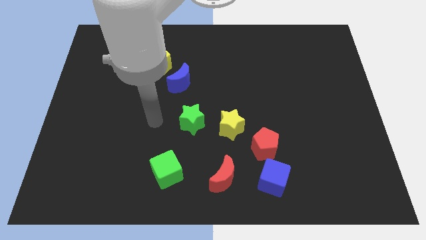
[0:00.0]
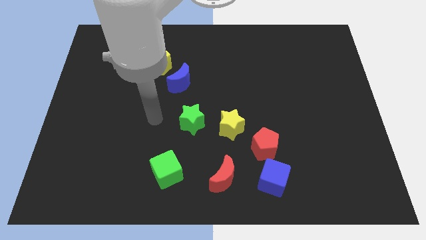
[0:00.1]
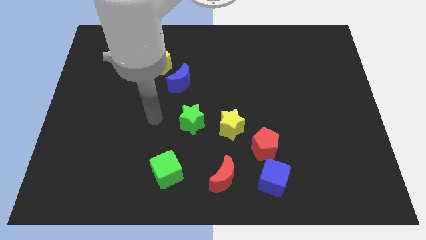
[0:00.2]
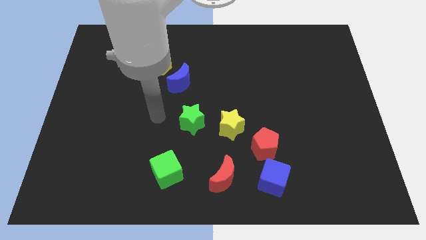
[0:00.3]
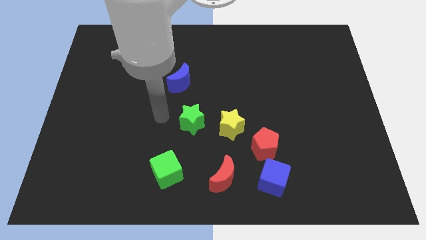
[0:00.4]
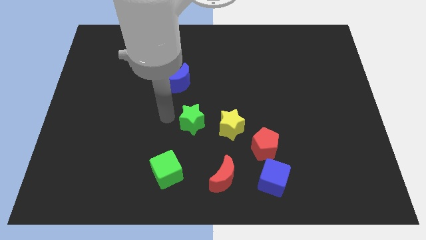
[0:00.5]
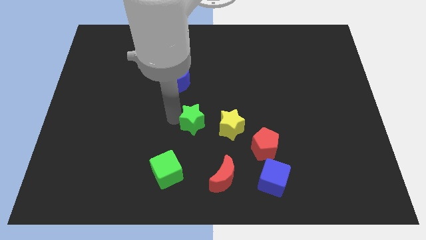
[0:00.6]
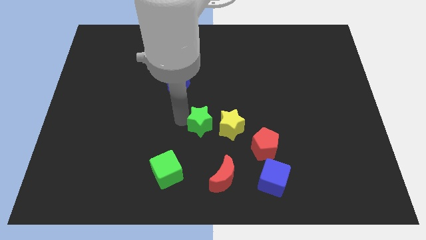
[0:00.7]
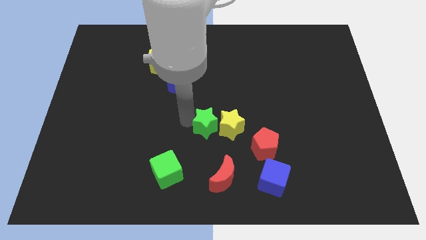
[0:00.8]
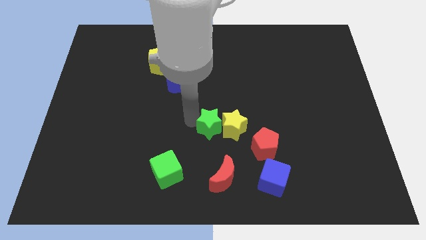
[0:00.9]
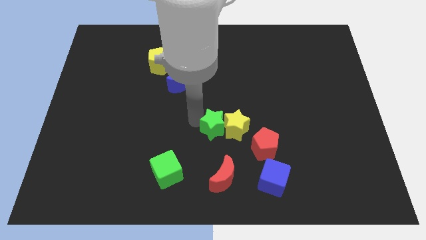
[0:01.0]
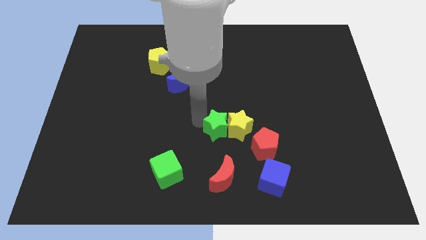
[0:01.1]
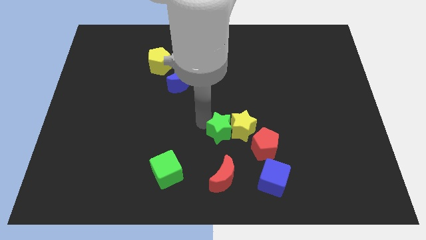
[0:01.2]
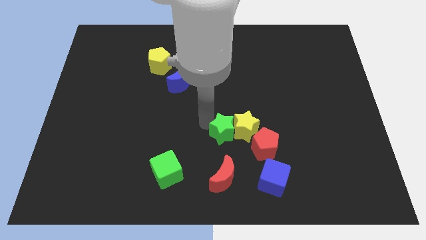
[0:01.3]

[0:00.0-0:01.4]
push the green star into the yellow star

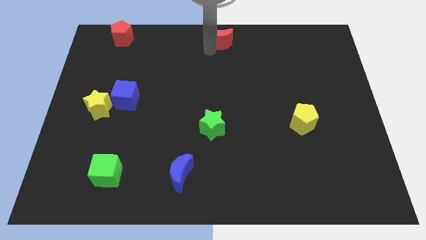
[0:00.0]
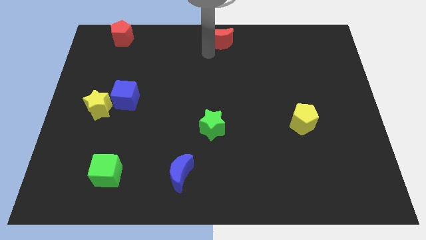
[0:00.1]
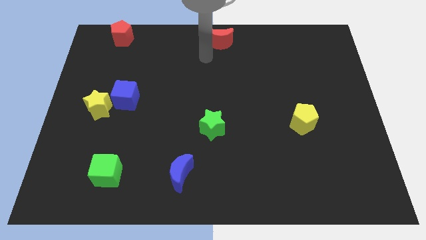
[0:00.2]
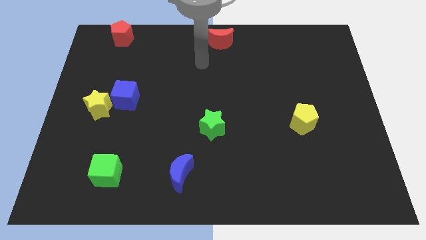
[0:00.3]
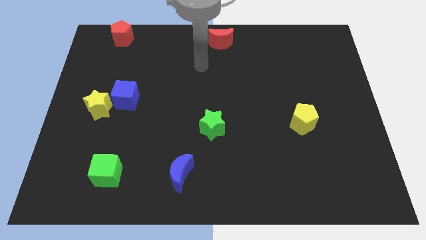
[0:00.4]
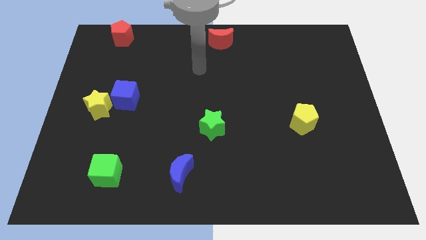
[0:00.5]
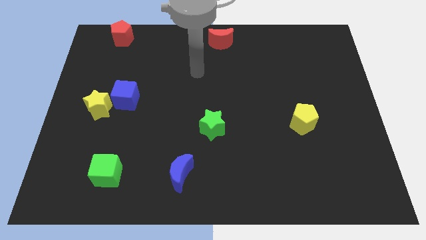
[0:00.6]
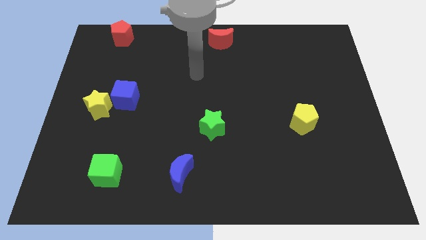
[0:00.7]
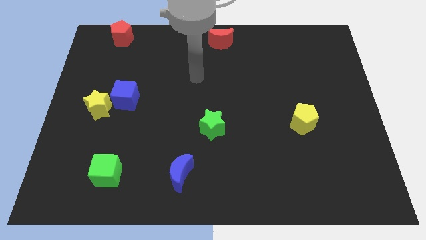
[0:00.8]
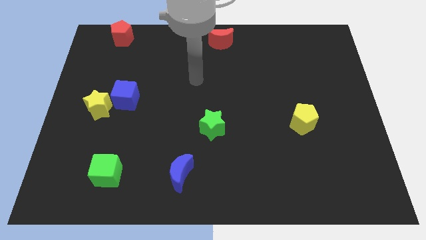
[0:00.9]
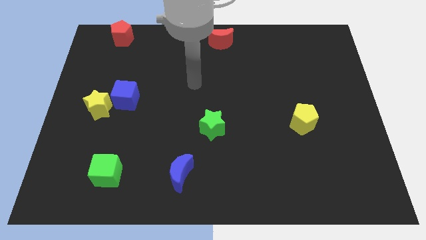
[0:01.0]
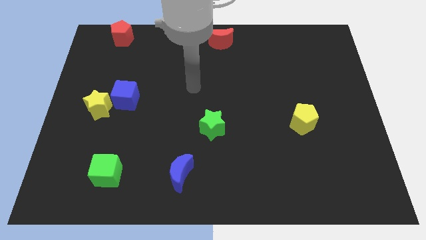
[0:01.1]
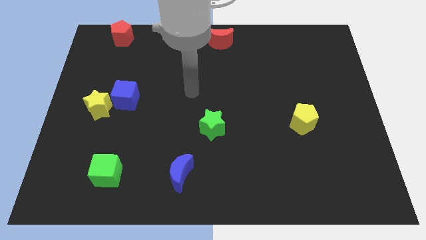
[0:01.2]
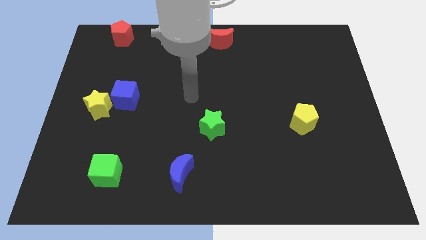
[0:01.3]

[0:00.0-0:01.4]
place the red moon to the top center

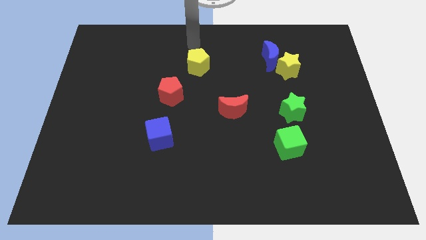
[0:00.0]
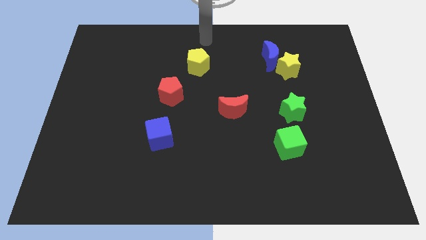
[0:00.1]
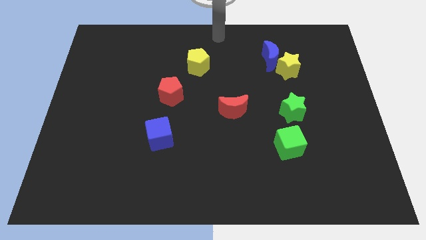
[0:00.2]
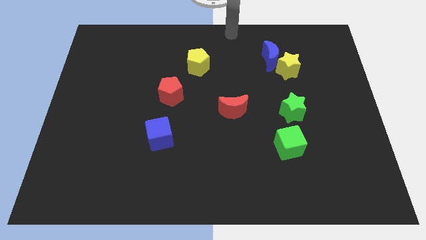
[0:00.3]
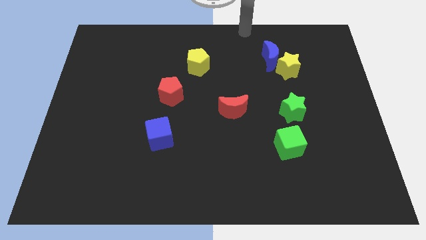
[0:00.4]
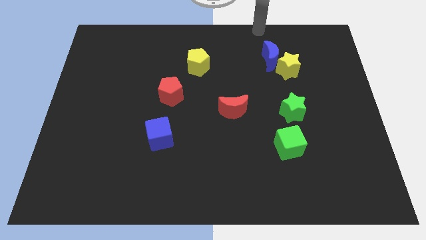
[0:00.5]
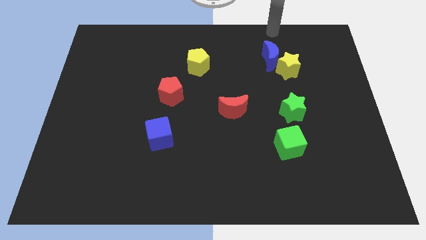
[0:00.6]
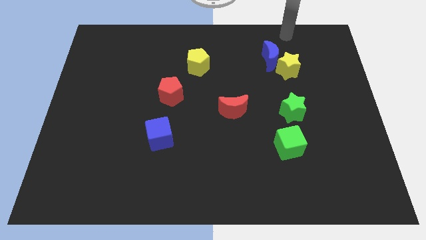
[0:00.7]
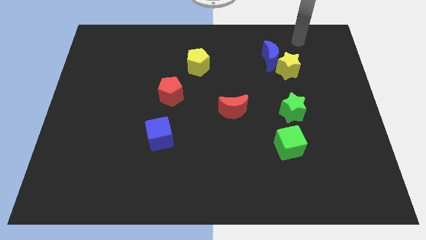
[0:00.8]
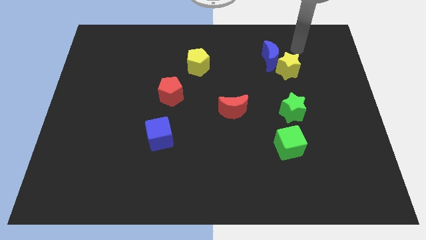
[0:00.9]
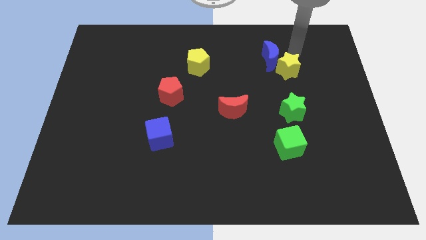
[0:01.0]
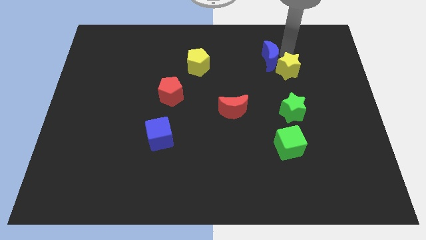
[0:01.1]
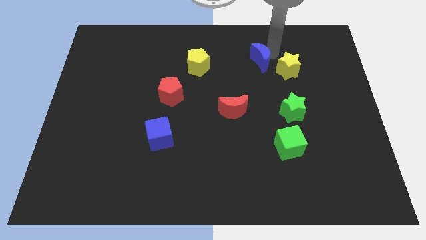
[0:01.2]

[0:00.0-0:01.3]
place your arm to the right of the blue moon

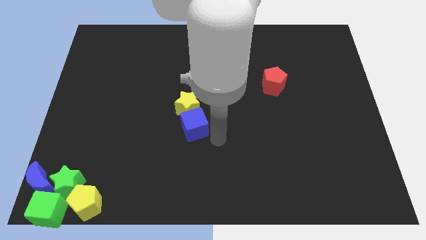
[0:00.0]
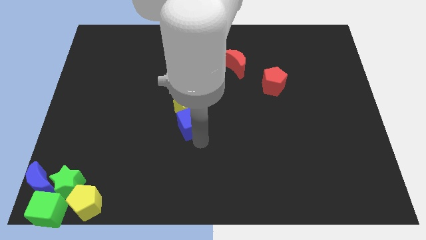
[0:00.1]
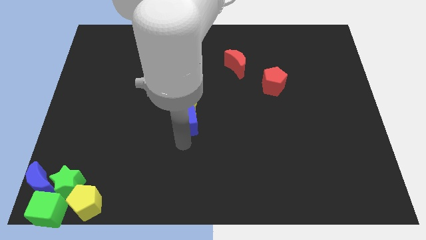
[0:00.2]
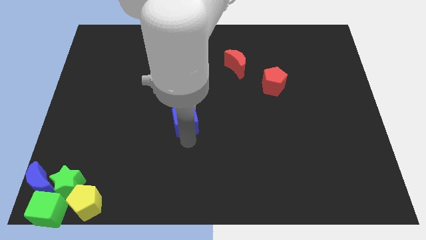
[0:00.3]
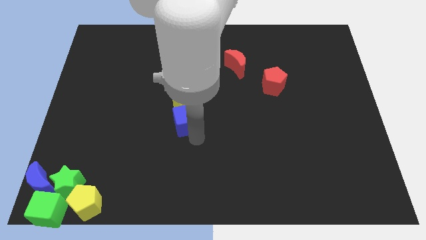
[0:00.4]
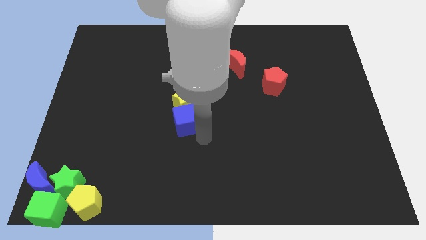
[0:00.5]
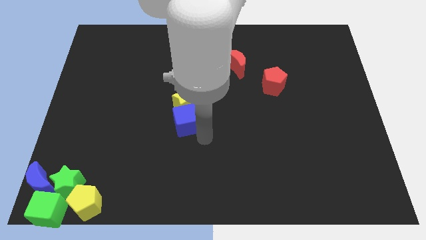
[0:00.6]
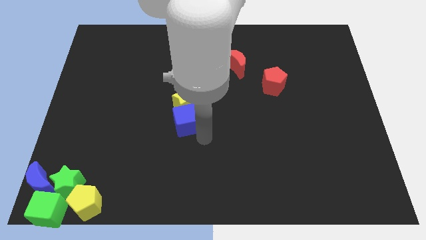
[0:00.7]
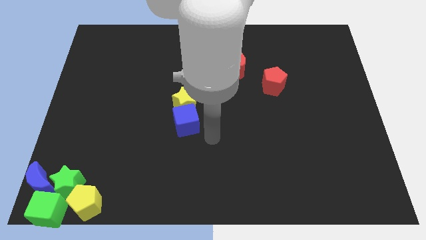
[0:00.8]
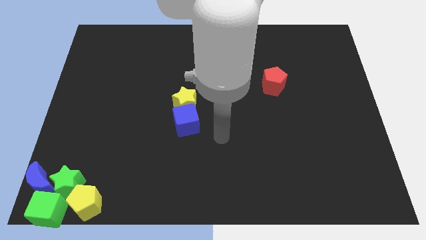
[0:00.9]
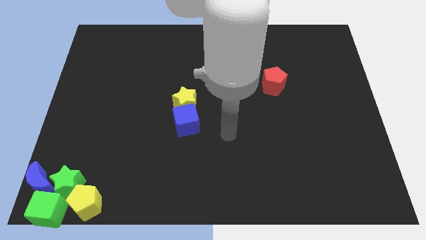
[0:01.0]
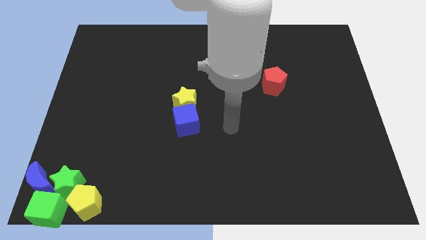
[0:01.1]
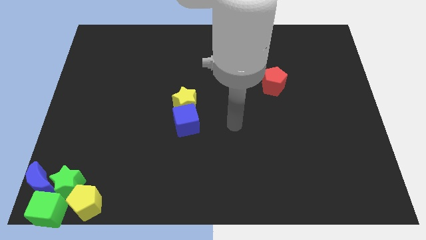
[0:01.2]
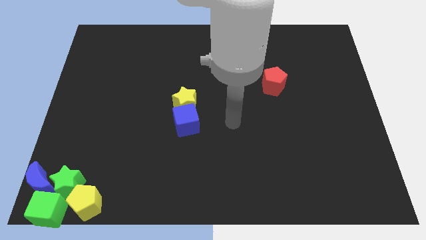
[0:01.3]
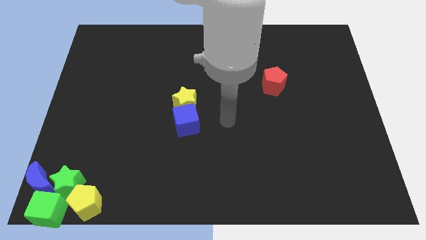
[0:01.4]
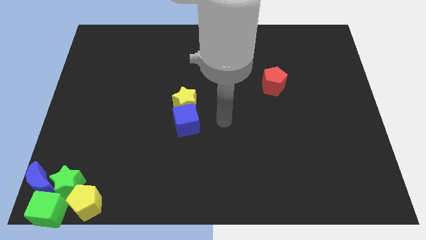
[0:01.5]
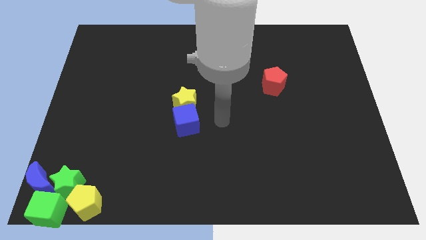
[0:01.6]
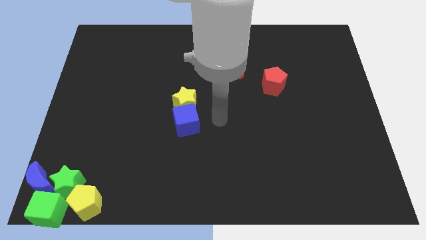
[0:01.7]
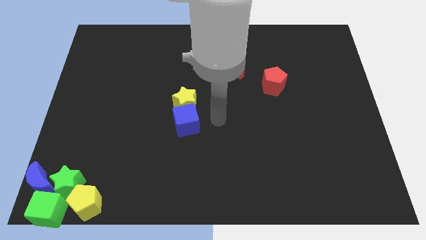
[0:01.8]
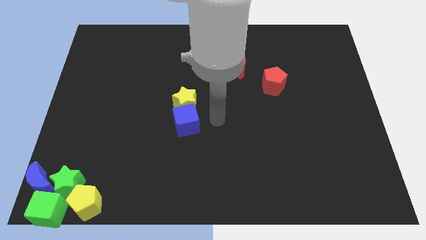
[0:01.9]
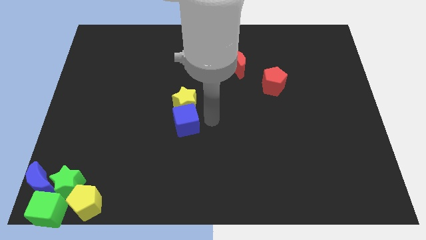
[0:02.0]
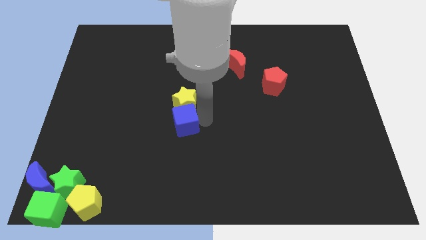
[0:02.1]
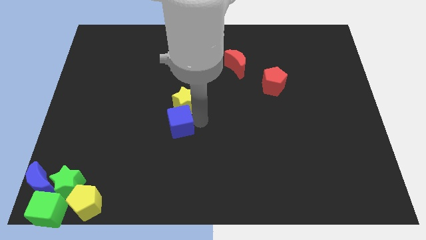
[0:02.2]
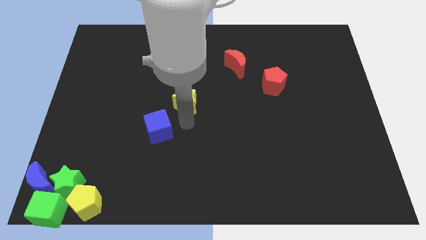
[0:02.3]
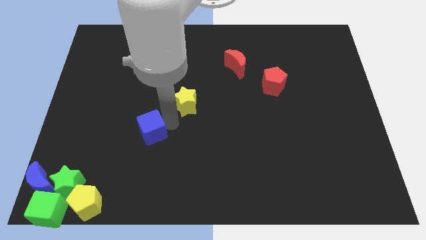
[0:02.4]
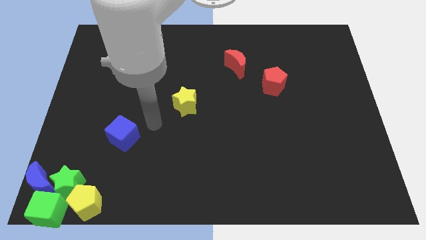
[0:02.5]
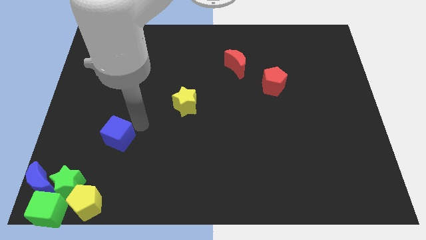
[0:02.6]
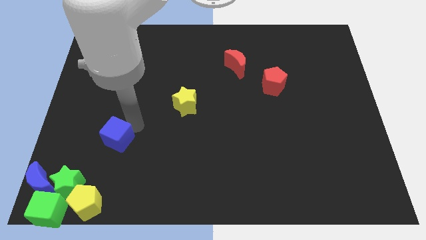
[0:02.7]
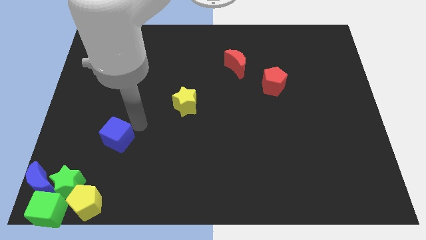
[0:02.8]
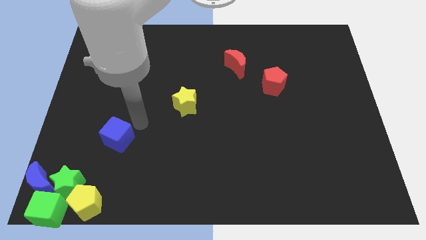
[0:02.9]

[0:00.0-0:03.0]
move the blue cube away from the yellow star

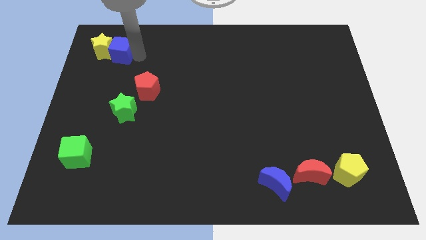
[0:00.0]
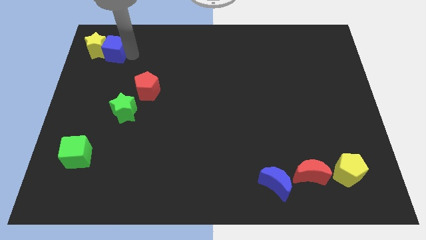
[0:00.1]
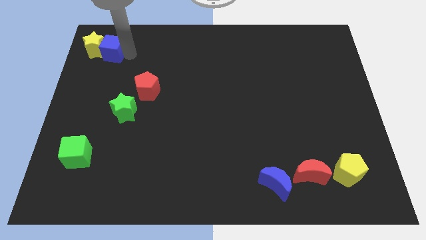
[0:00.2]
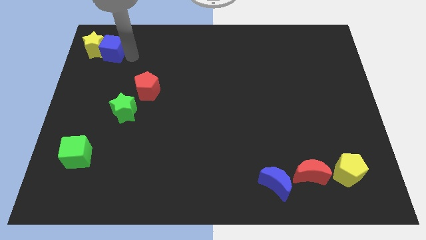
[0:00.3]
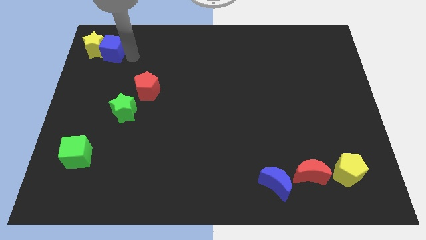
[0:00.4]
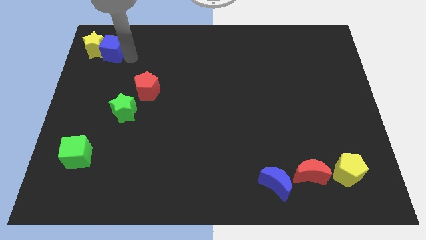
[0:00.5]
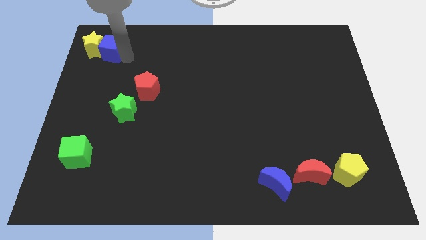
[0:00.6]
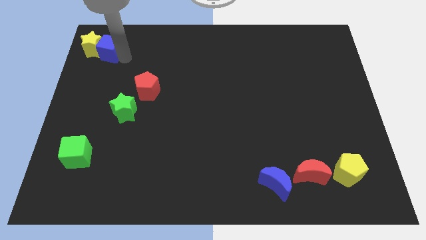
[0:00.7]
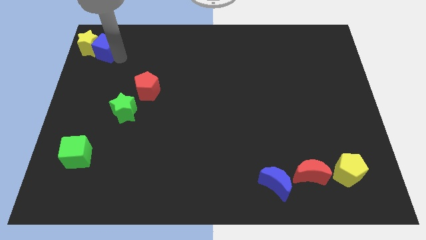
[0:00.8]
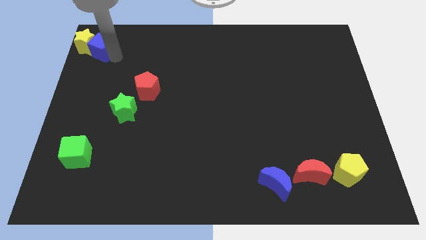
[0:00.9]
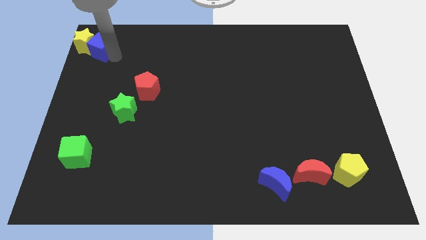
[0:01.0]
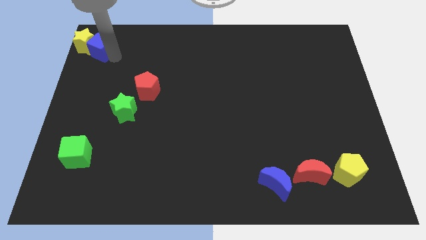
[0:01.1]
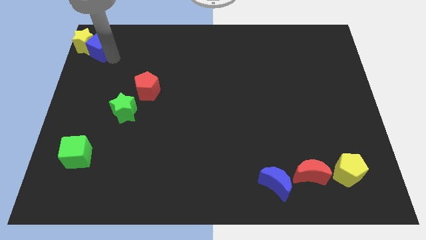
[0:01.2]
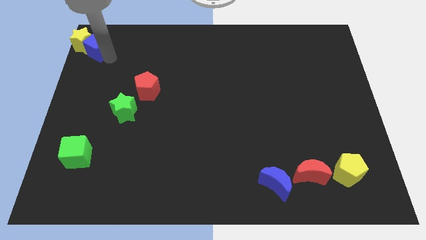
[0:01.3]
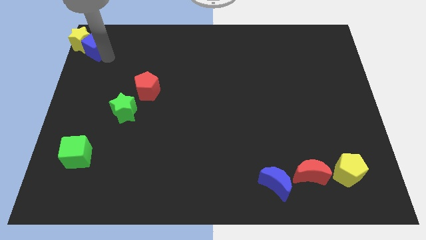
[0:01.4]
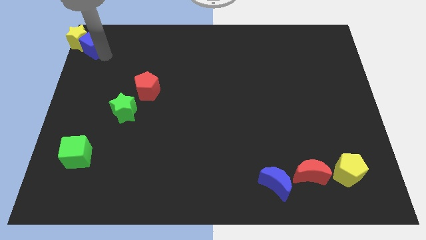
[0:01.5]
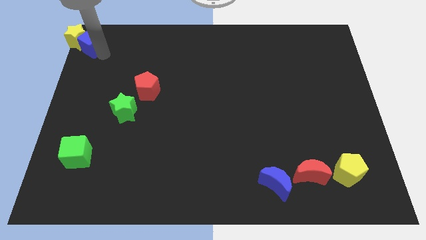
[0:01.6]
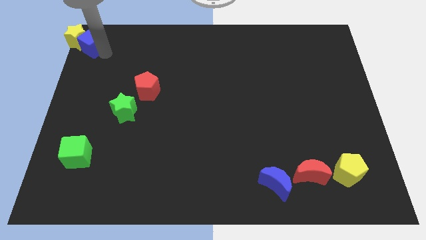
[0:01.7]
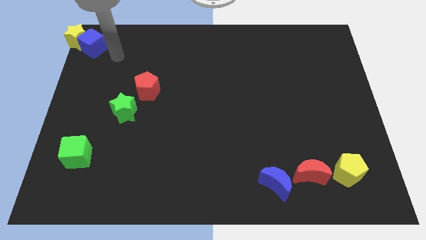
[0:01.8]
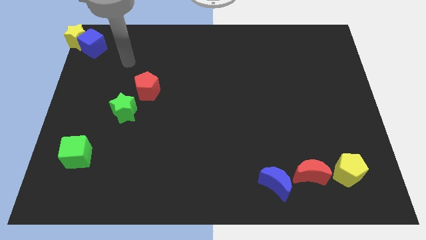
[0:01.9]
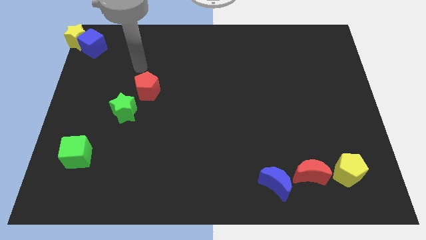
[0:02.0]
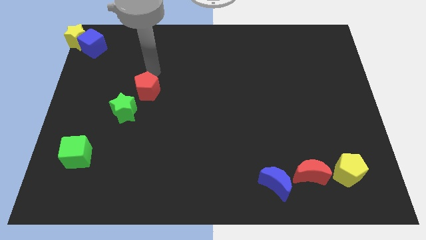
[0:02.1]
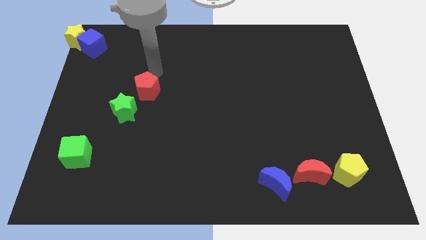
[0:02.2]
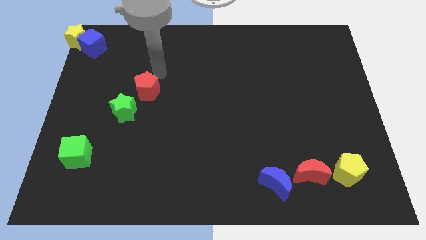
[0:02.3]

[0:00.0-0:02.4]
push yellow star with blue cube to the top left corner of the board
